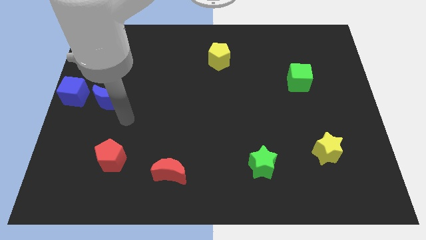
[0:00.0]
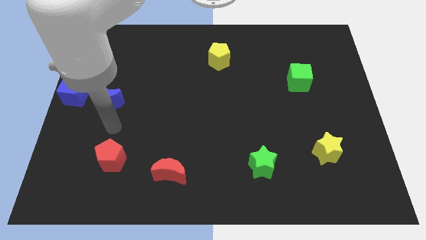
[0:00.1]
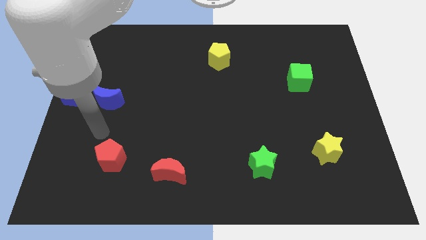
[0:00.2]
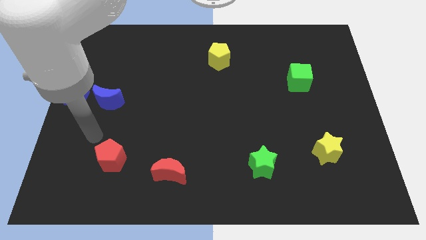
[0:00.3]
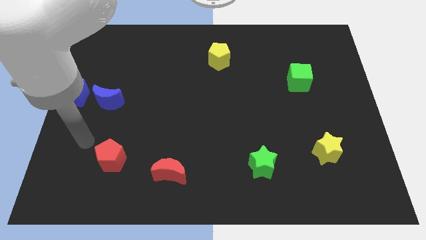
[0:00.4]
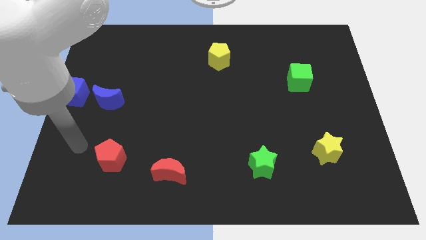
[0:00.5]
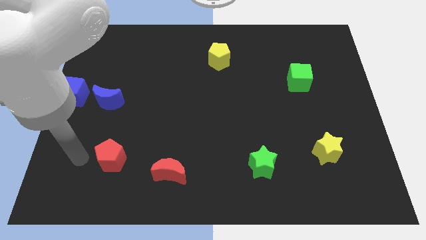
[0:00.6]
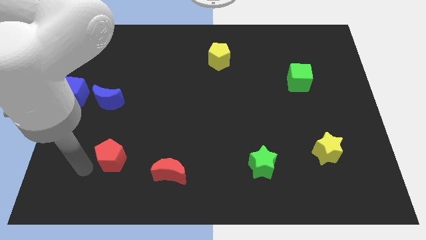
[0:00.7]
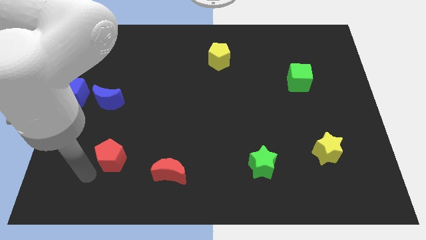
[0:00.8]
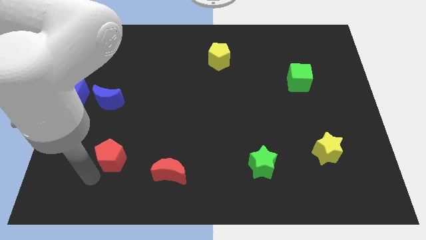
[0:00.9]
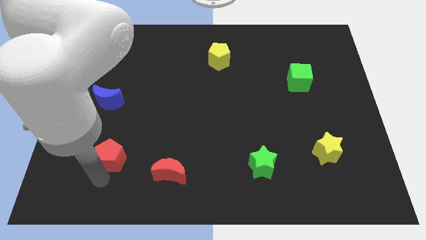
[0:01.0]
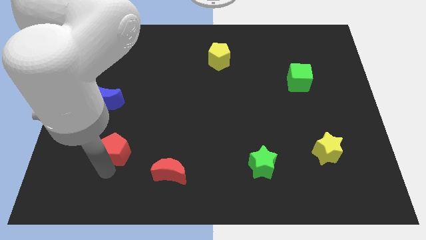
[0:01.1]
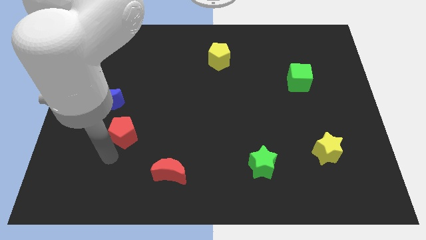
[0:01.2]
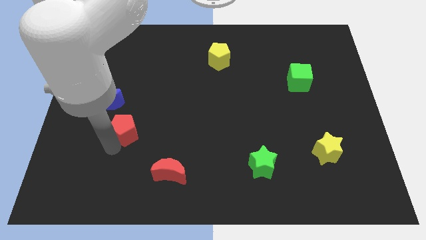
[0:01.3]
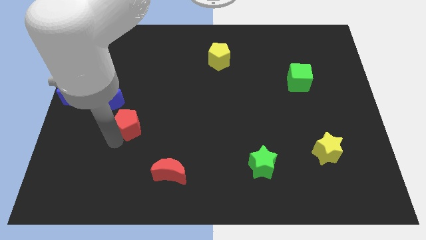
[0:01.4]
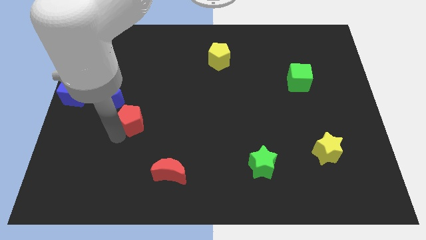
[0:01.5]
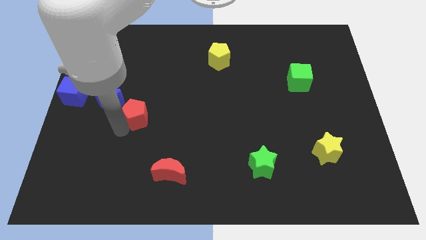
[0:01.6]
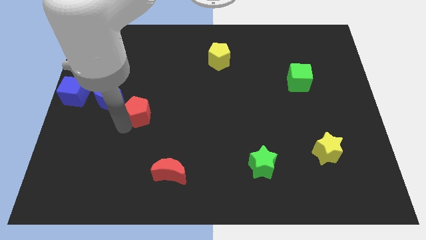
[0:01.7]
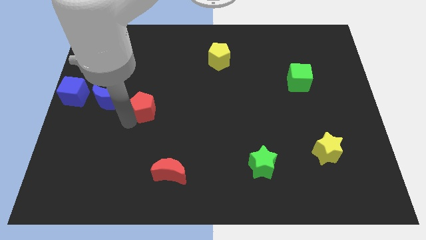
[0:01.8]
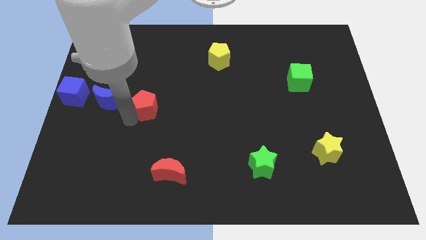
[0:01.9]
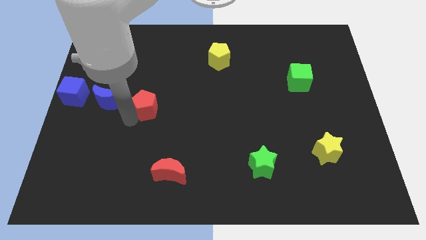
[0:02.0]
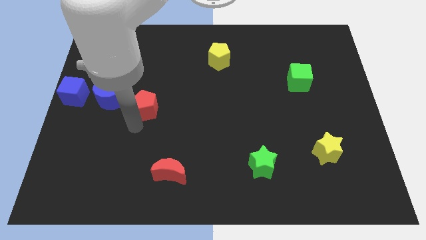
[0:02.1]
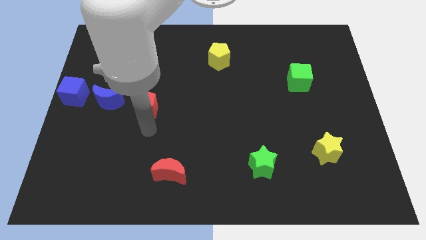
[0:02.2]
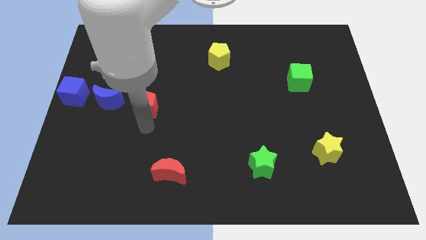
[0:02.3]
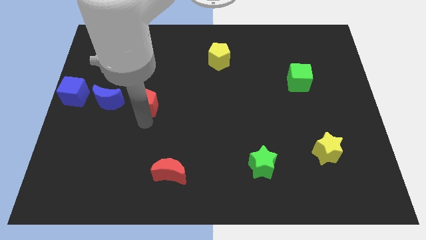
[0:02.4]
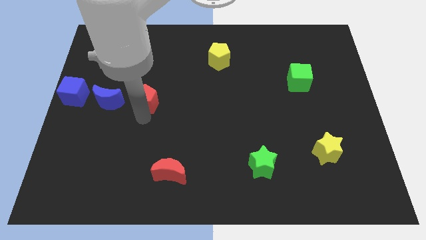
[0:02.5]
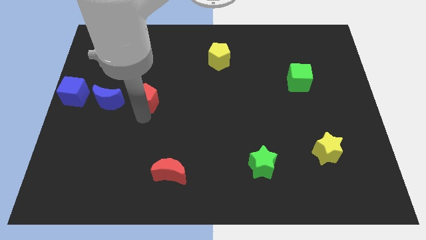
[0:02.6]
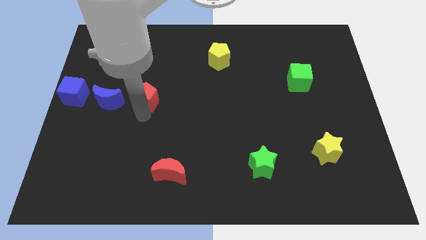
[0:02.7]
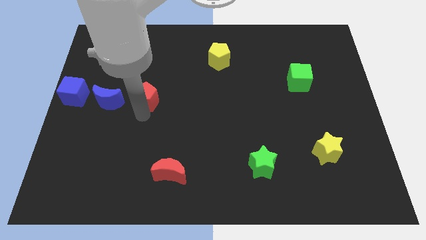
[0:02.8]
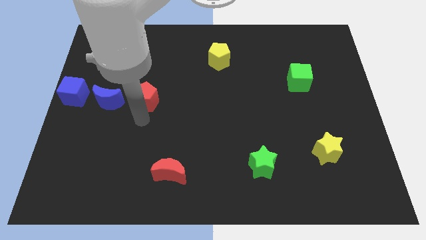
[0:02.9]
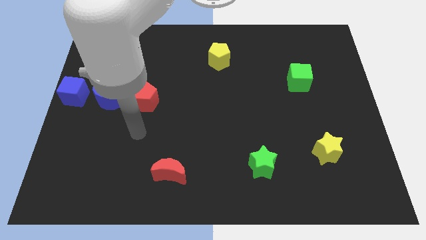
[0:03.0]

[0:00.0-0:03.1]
move the red pentagon at the right side of the blue crescent

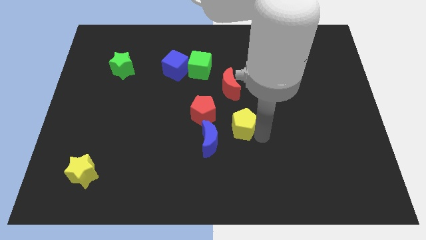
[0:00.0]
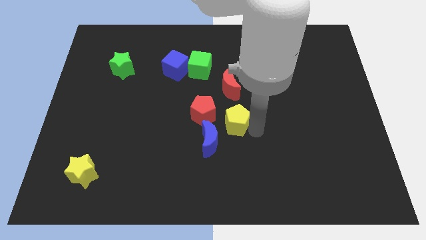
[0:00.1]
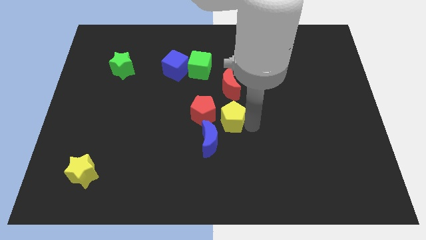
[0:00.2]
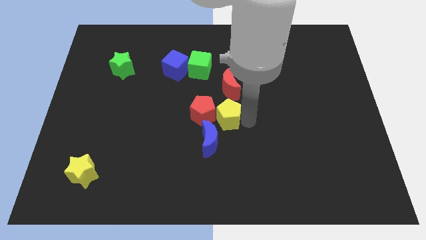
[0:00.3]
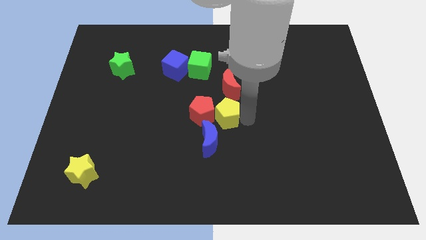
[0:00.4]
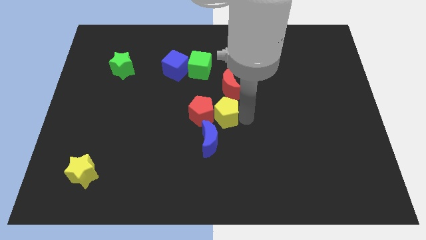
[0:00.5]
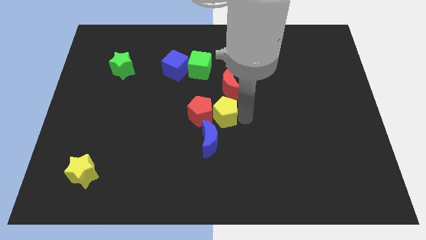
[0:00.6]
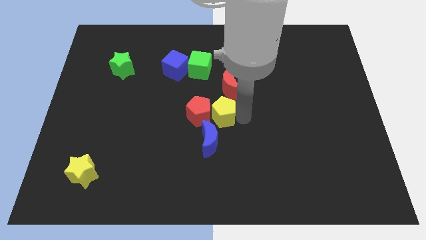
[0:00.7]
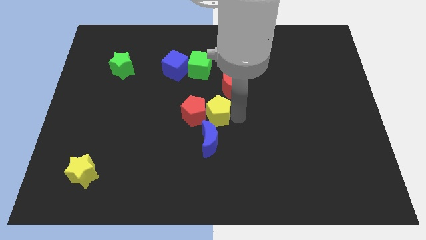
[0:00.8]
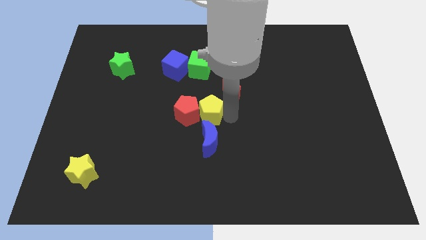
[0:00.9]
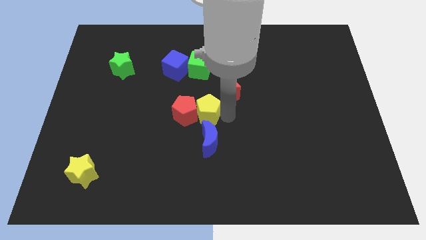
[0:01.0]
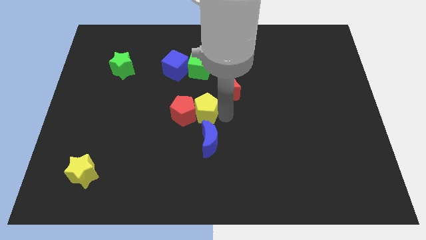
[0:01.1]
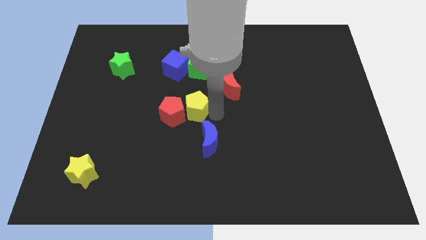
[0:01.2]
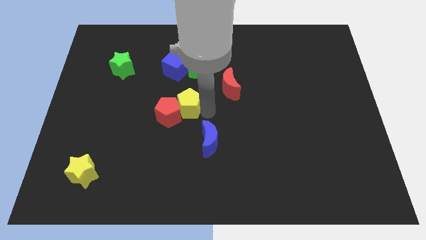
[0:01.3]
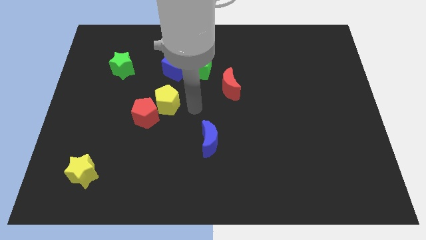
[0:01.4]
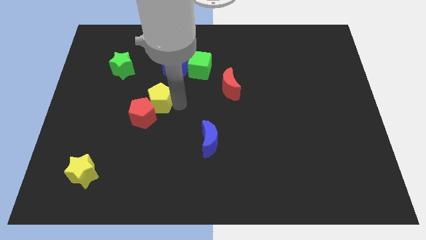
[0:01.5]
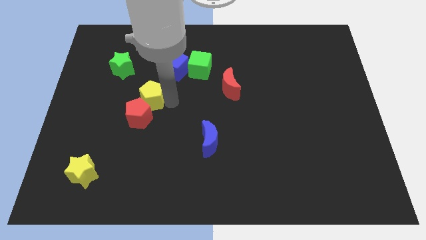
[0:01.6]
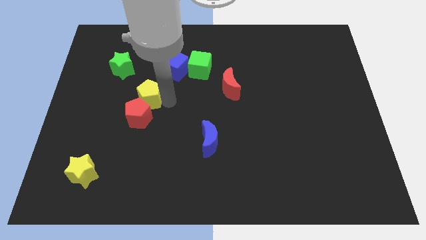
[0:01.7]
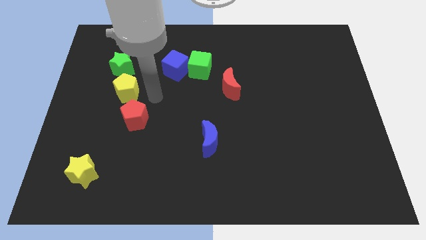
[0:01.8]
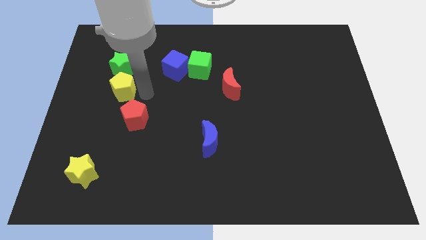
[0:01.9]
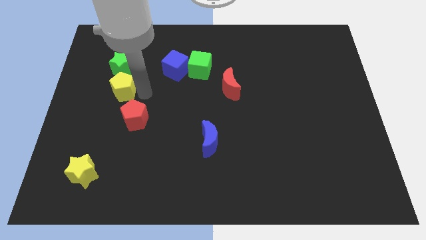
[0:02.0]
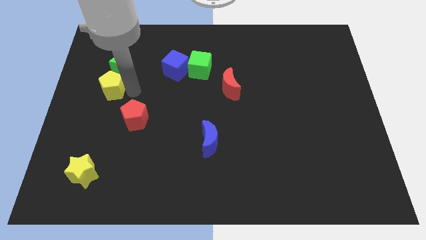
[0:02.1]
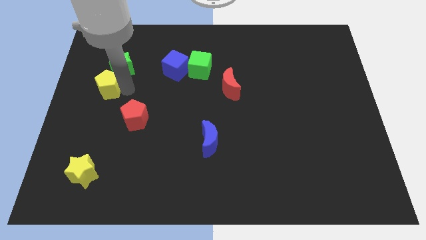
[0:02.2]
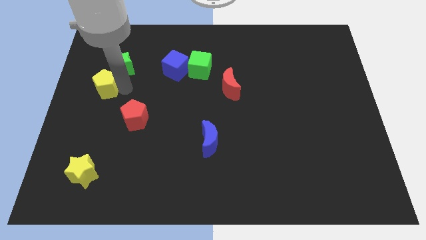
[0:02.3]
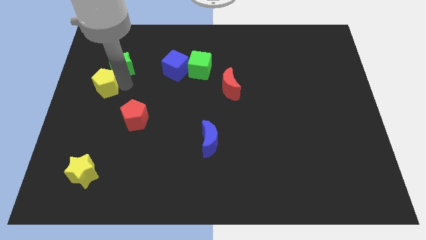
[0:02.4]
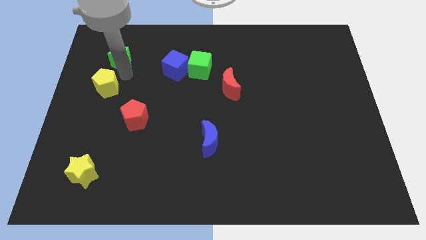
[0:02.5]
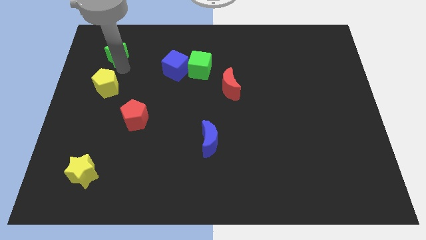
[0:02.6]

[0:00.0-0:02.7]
move the yellow pentagon pushing red pentagon to the left center

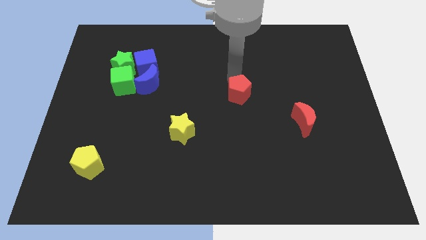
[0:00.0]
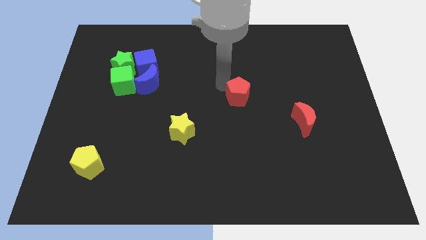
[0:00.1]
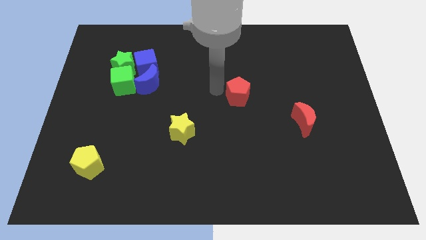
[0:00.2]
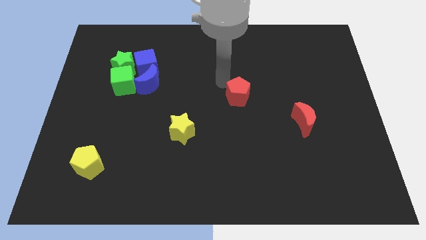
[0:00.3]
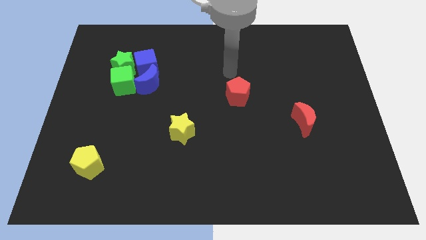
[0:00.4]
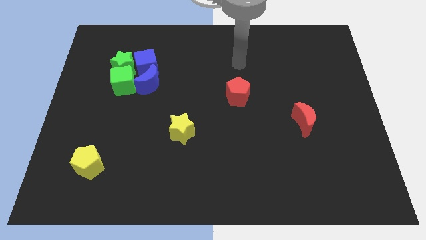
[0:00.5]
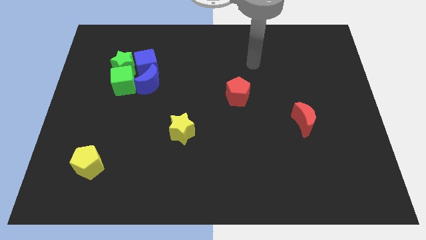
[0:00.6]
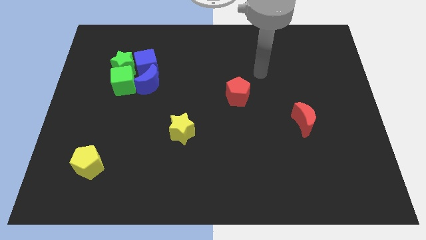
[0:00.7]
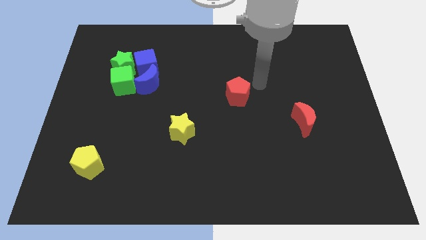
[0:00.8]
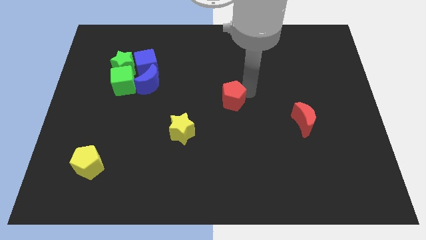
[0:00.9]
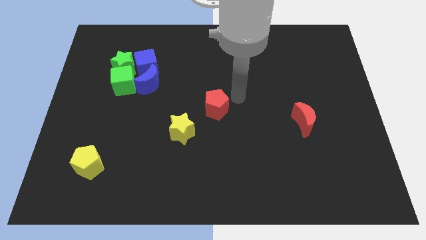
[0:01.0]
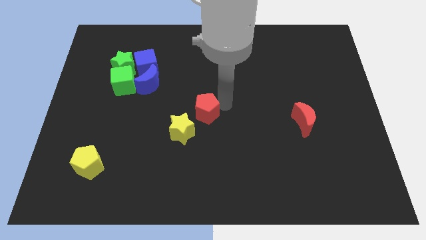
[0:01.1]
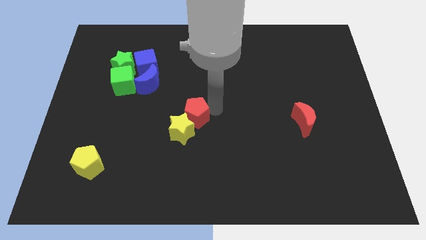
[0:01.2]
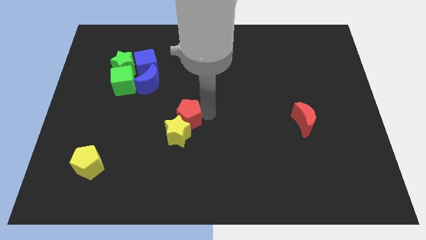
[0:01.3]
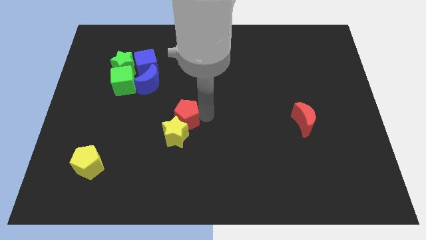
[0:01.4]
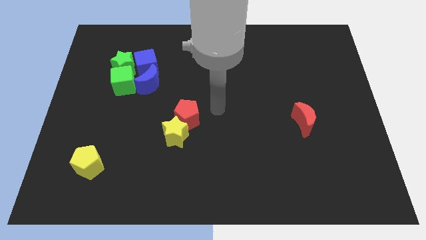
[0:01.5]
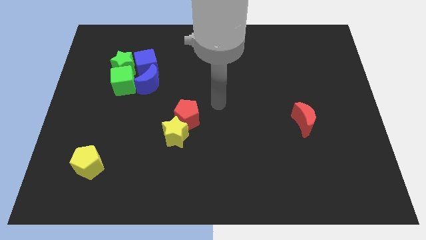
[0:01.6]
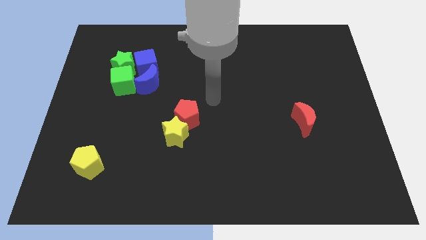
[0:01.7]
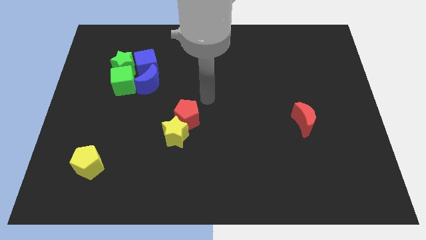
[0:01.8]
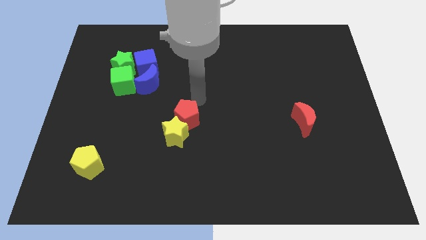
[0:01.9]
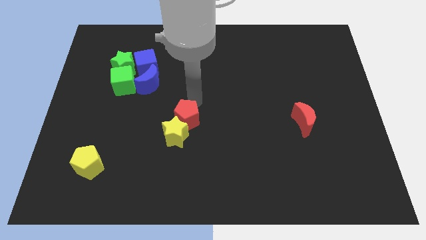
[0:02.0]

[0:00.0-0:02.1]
push the red pentagon into the yellow star

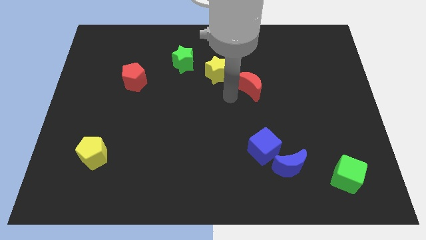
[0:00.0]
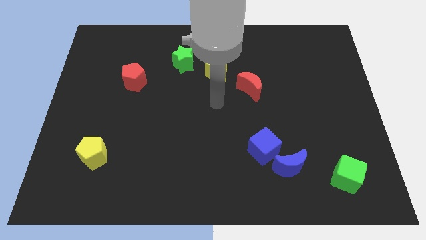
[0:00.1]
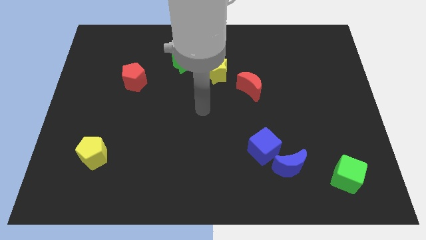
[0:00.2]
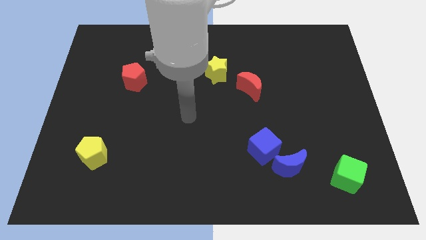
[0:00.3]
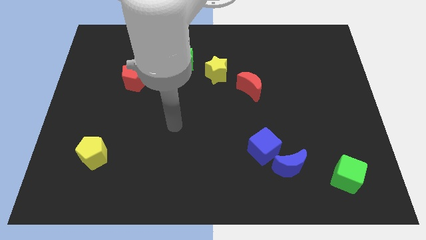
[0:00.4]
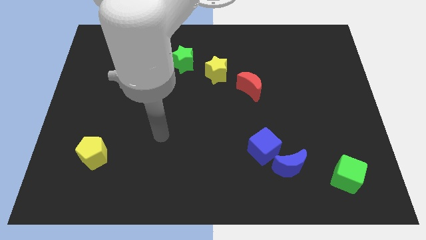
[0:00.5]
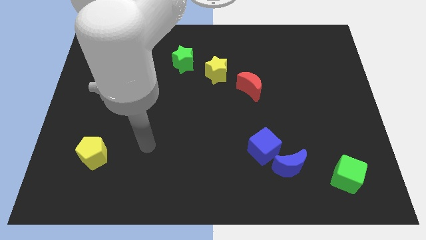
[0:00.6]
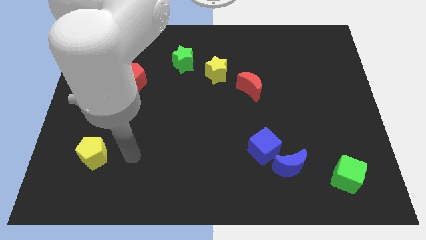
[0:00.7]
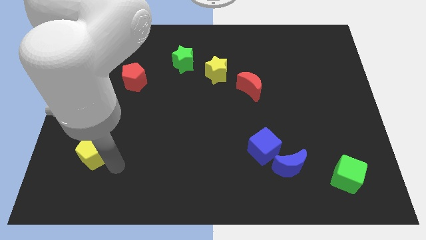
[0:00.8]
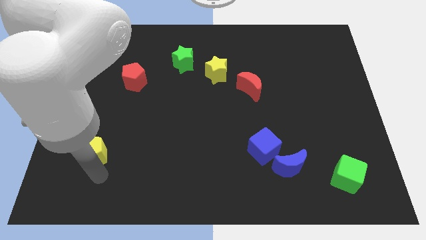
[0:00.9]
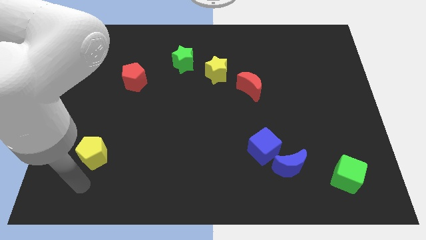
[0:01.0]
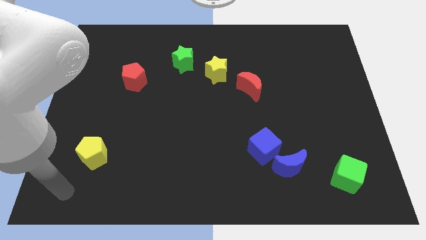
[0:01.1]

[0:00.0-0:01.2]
place your hand under the yellow pentagon
